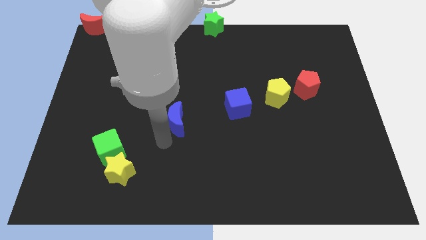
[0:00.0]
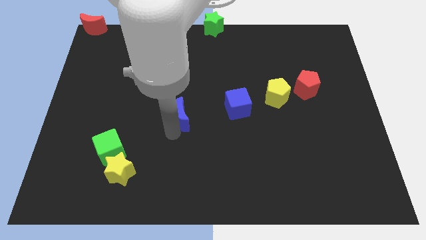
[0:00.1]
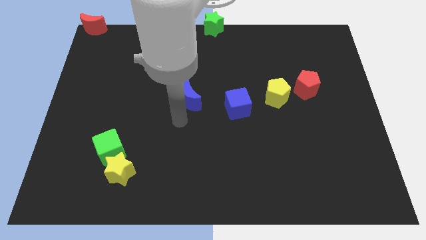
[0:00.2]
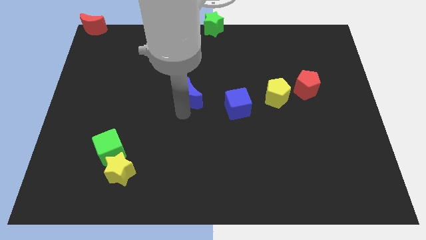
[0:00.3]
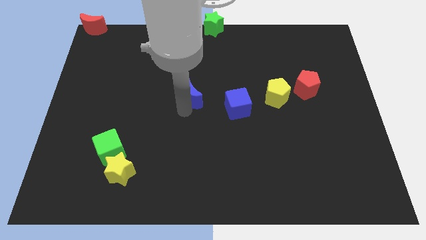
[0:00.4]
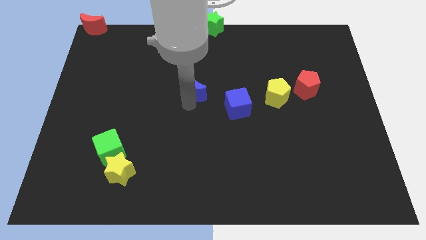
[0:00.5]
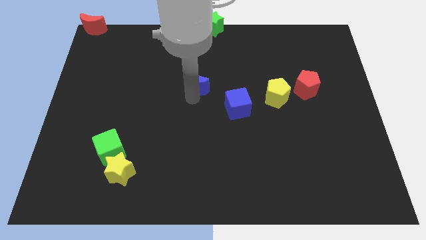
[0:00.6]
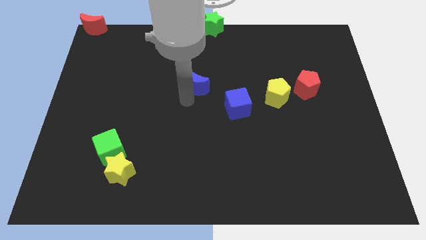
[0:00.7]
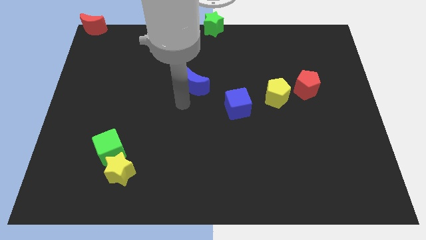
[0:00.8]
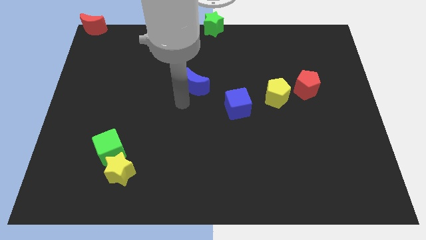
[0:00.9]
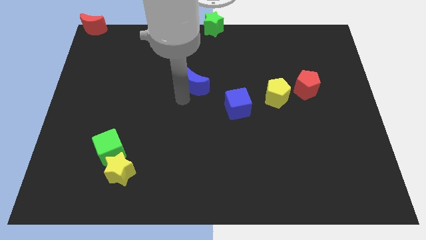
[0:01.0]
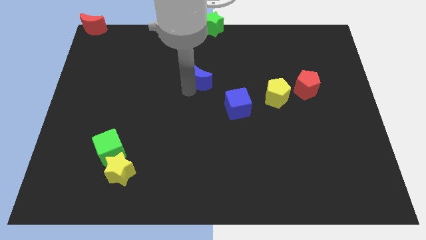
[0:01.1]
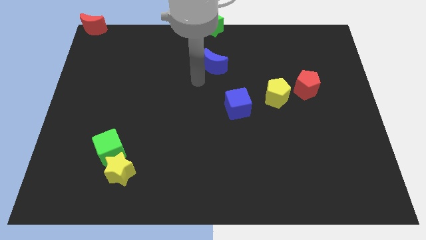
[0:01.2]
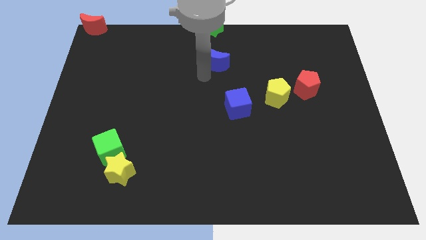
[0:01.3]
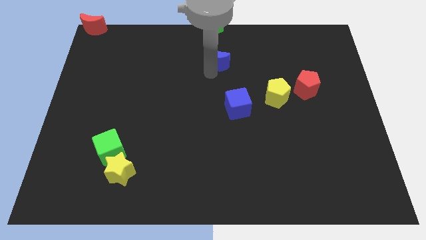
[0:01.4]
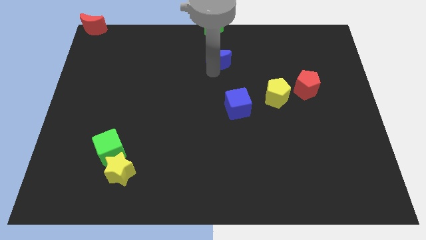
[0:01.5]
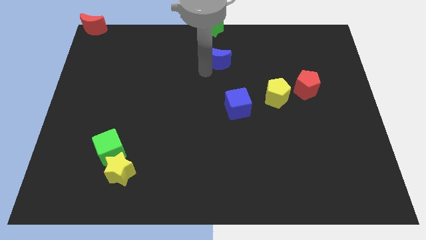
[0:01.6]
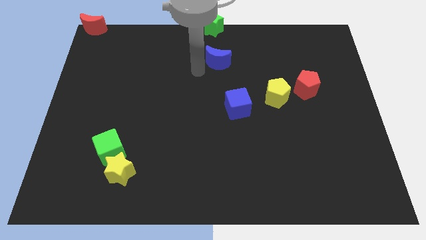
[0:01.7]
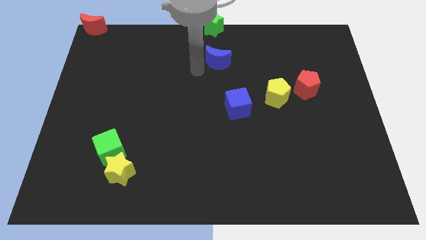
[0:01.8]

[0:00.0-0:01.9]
place the blue moon down to the green star

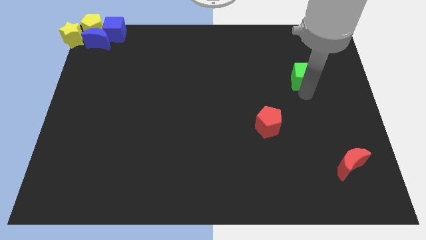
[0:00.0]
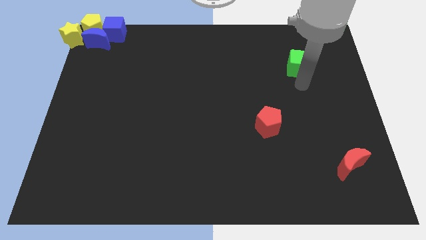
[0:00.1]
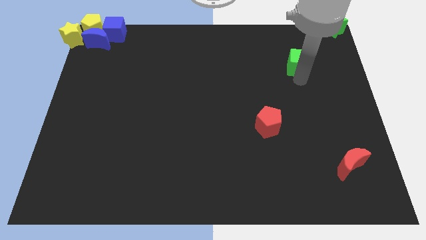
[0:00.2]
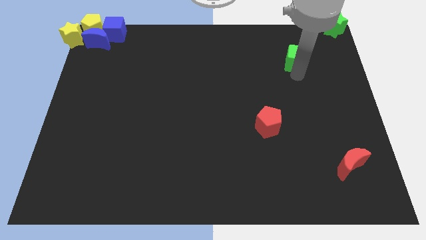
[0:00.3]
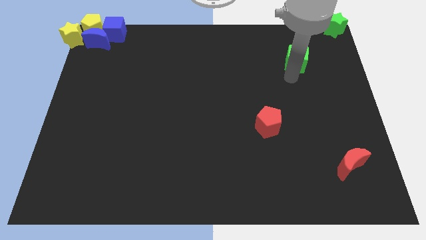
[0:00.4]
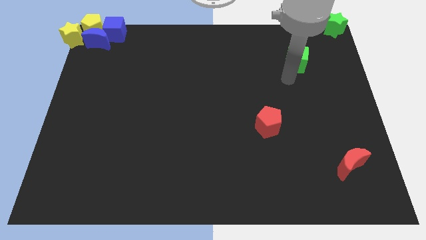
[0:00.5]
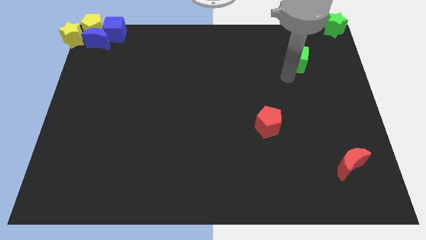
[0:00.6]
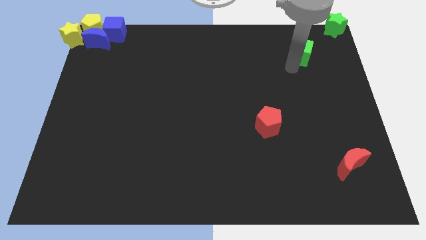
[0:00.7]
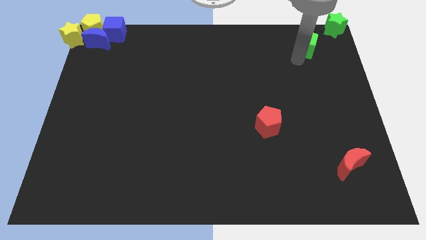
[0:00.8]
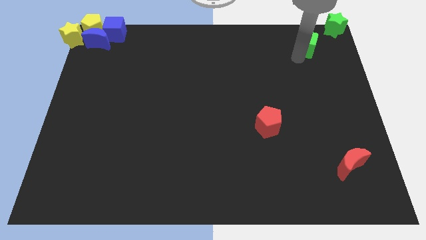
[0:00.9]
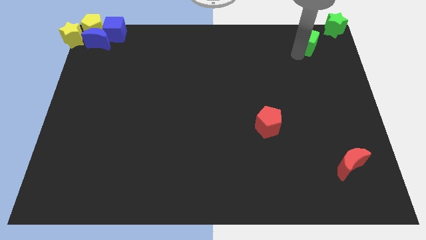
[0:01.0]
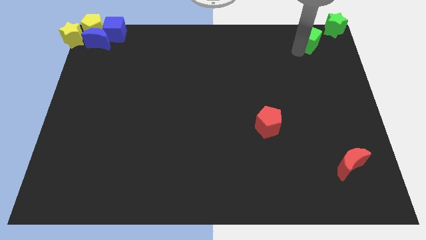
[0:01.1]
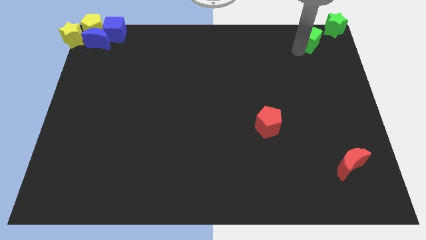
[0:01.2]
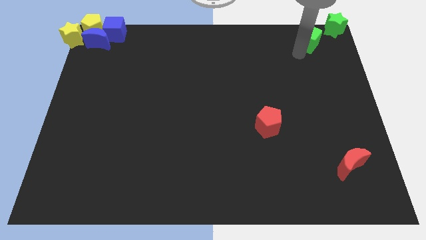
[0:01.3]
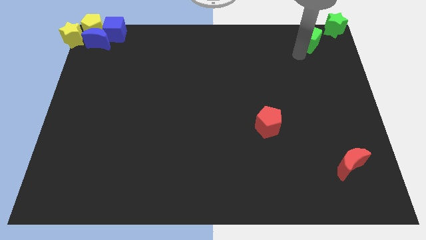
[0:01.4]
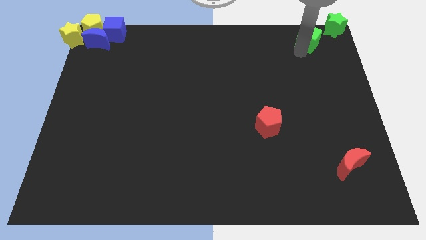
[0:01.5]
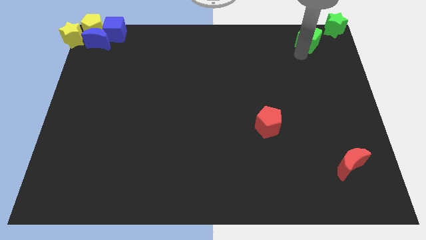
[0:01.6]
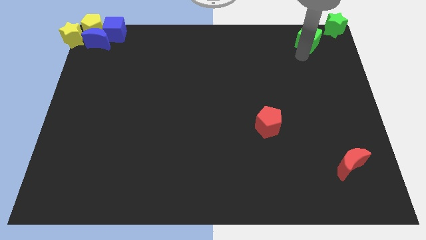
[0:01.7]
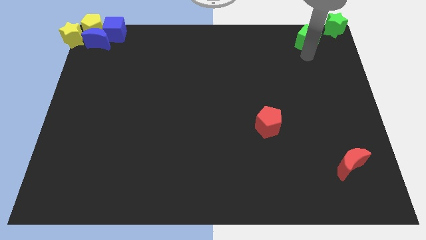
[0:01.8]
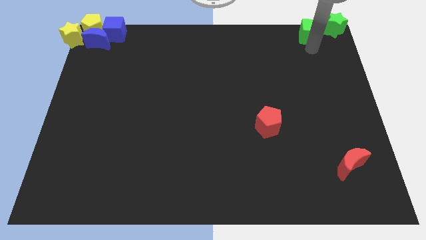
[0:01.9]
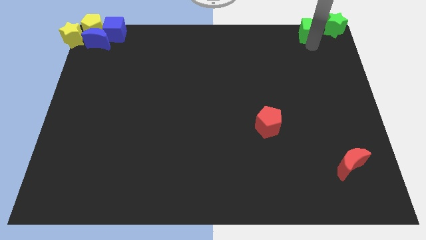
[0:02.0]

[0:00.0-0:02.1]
move the green cube to the left of the green star

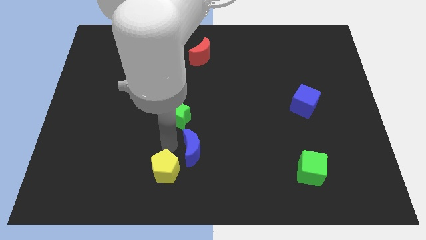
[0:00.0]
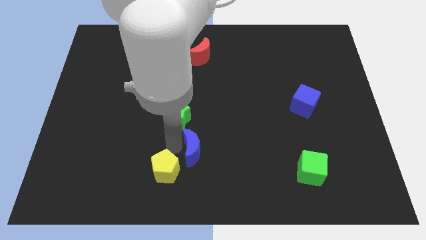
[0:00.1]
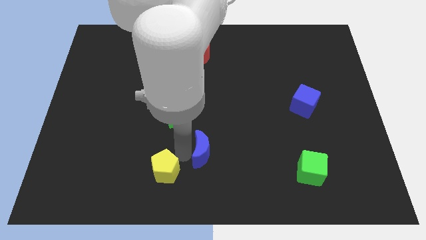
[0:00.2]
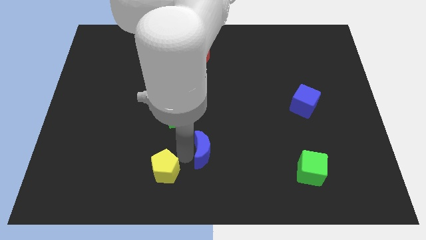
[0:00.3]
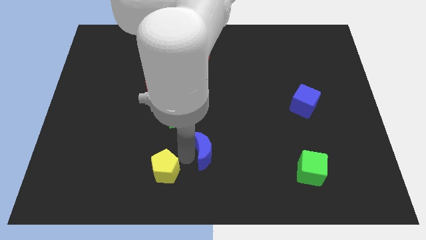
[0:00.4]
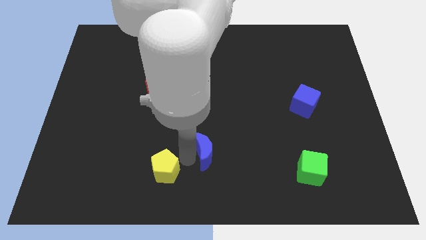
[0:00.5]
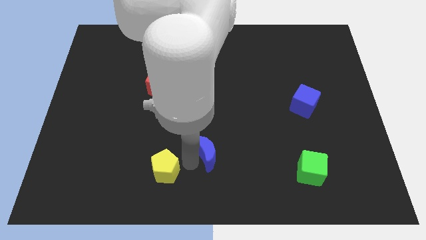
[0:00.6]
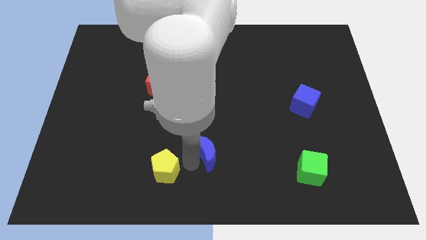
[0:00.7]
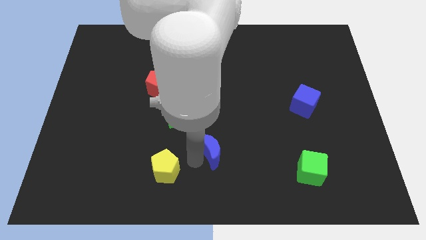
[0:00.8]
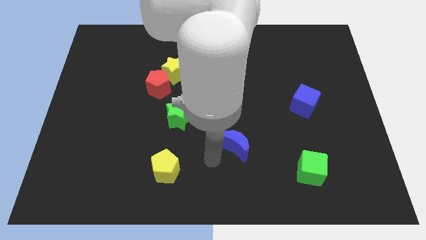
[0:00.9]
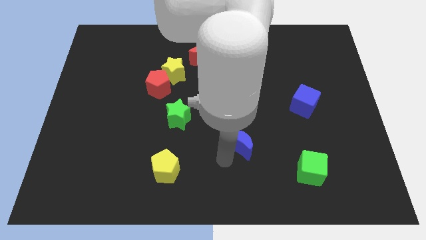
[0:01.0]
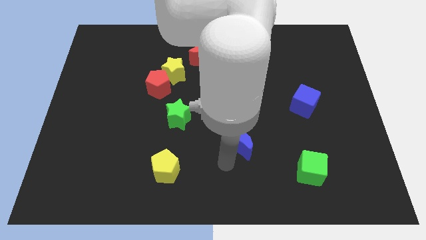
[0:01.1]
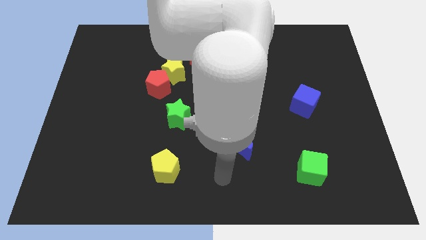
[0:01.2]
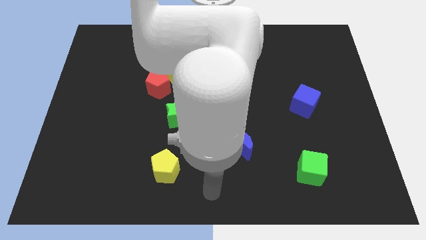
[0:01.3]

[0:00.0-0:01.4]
push the blue crescent away from the green star

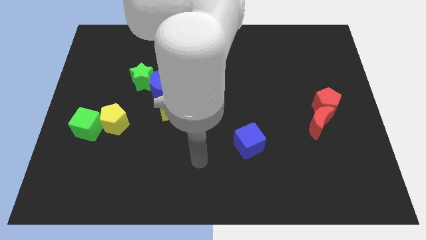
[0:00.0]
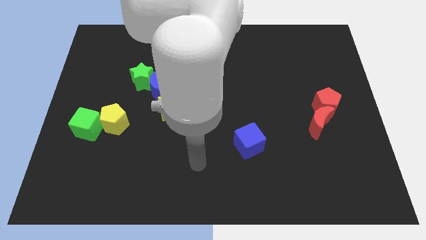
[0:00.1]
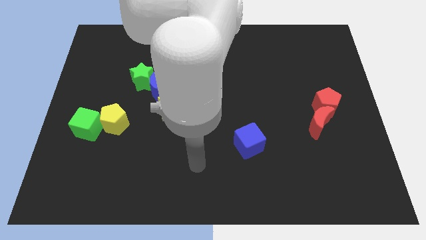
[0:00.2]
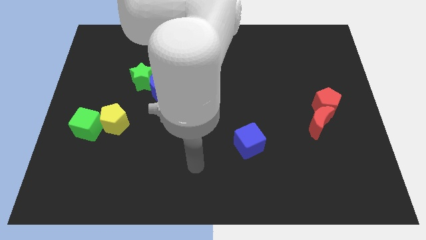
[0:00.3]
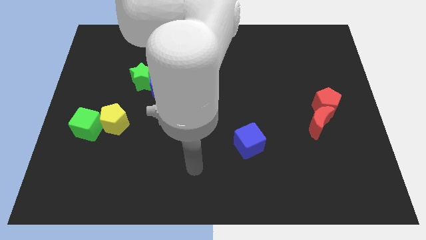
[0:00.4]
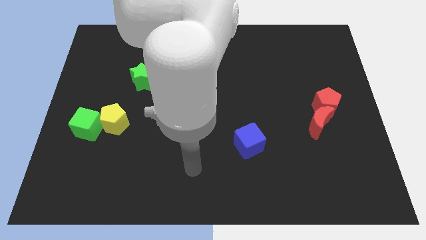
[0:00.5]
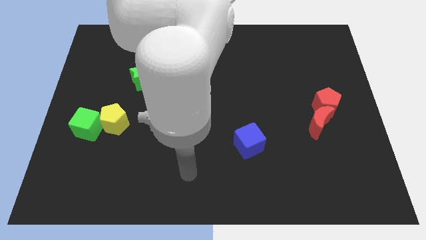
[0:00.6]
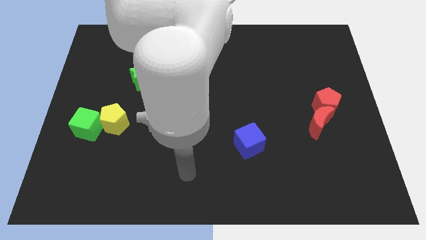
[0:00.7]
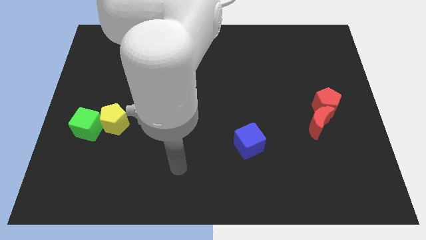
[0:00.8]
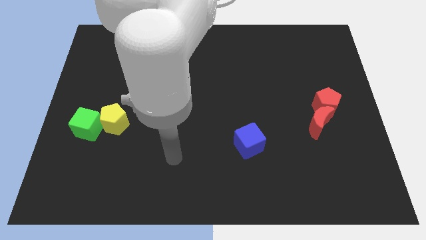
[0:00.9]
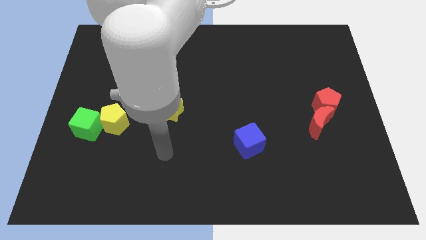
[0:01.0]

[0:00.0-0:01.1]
slide your arm below the yellow star

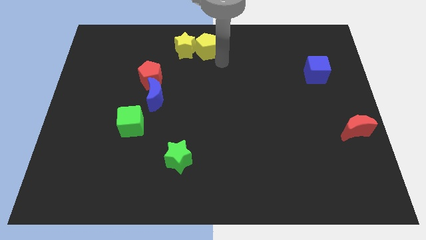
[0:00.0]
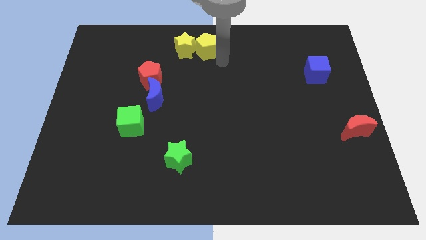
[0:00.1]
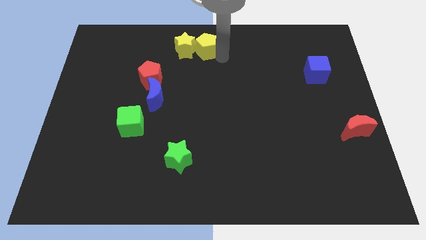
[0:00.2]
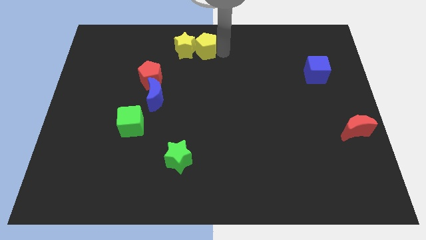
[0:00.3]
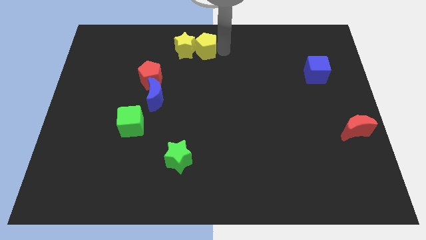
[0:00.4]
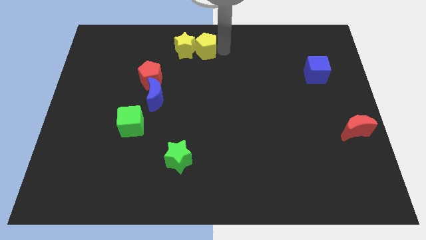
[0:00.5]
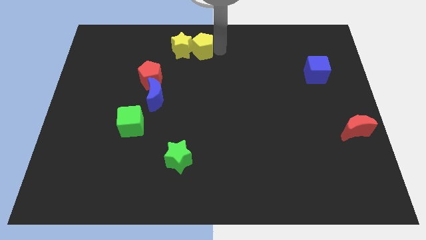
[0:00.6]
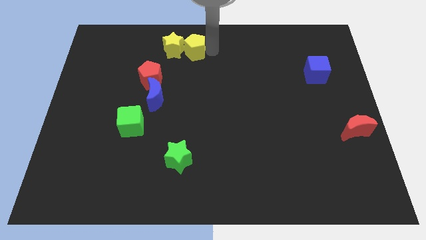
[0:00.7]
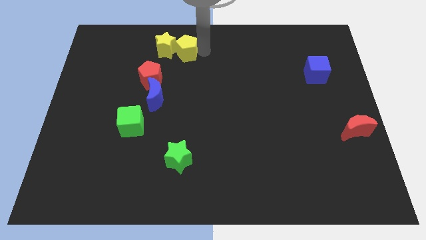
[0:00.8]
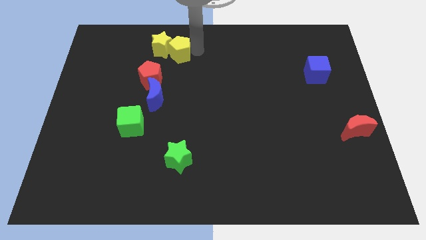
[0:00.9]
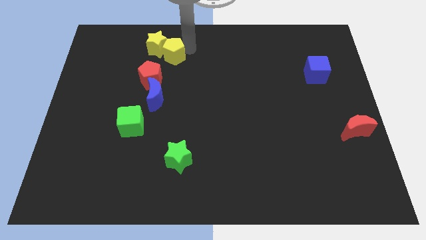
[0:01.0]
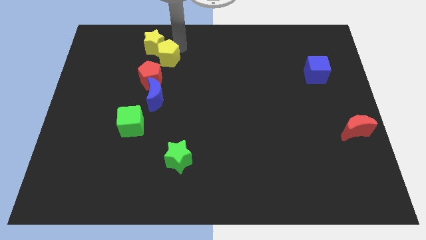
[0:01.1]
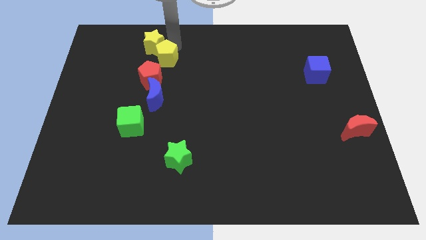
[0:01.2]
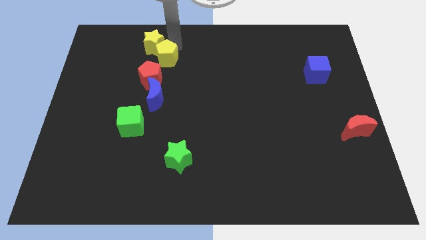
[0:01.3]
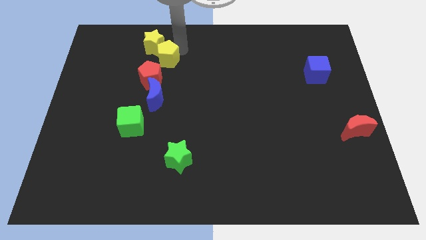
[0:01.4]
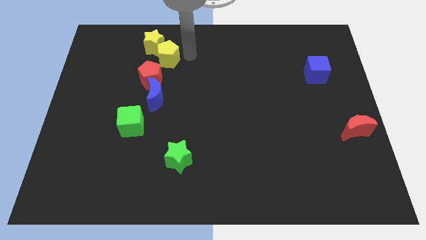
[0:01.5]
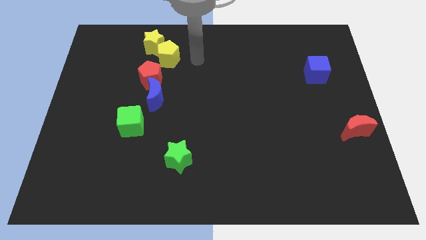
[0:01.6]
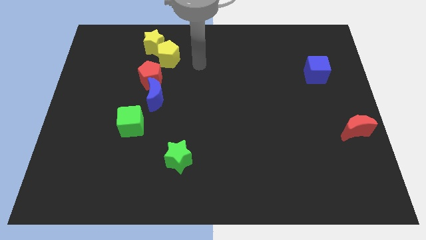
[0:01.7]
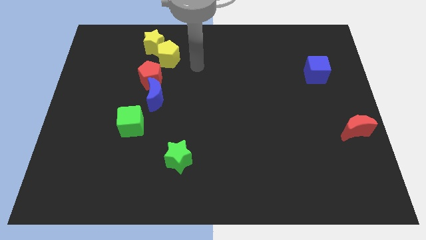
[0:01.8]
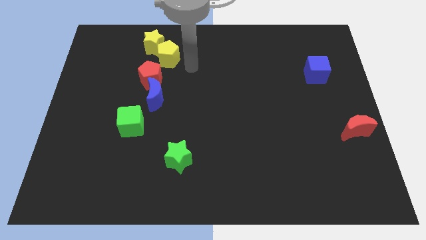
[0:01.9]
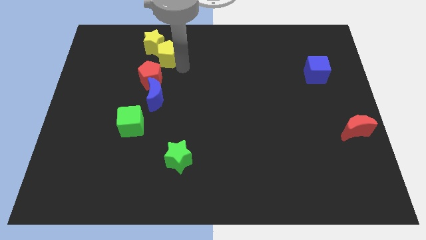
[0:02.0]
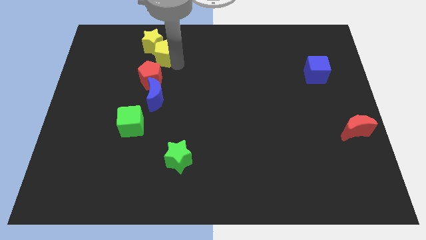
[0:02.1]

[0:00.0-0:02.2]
place the yellow star above the red pentagon

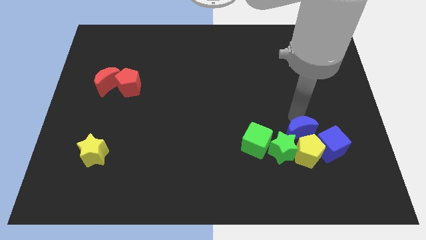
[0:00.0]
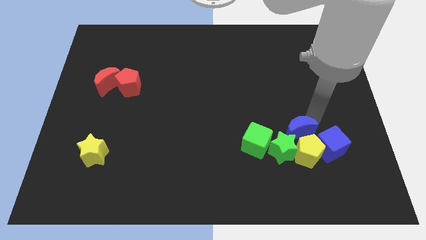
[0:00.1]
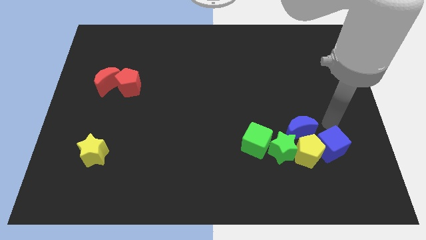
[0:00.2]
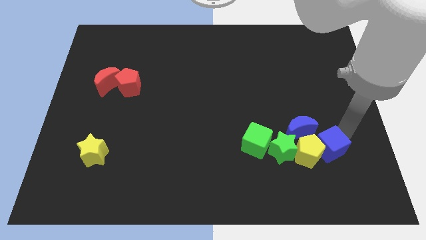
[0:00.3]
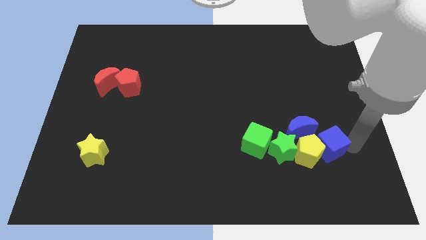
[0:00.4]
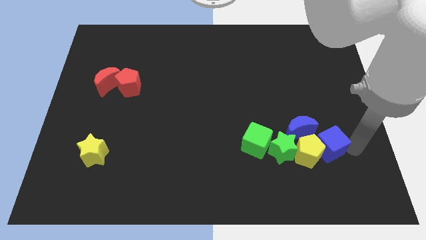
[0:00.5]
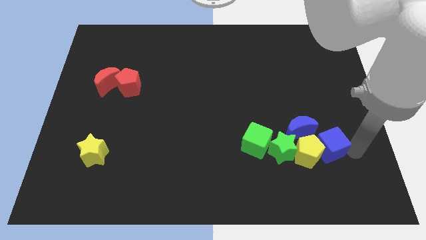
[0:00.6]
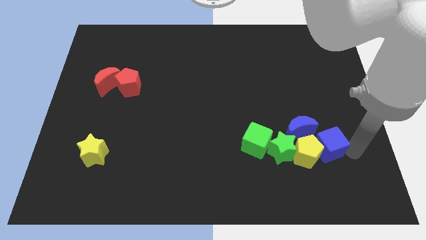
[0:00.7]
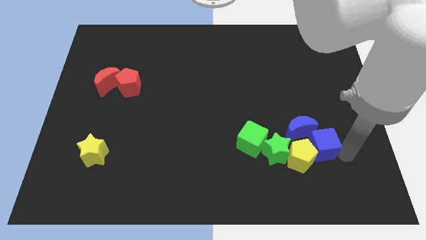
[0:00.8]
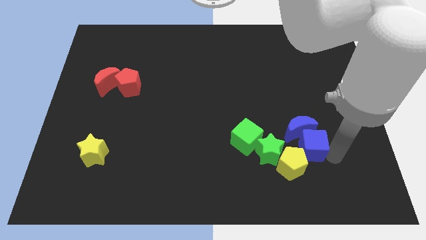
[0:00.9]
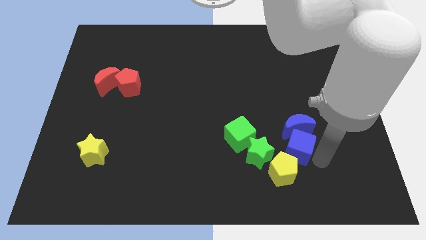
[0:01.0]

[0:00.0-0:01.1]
move the blue cube to the bottom of the blue crescent
